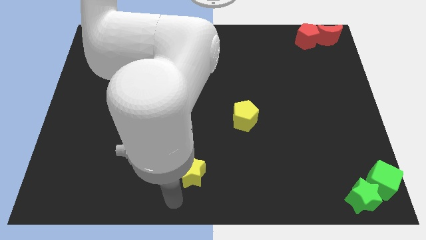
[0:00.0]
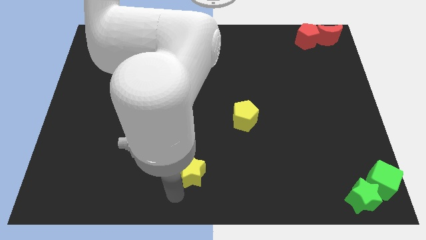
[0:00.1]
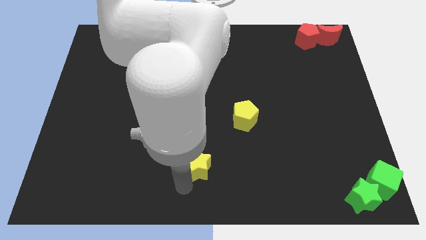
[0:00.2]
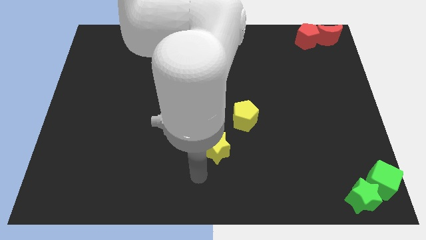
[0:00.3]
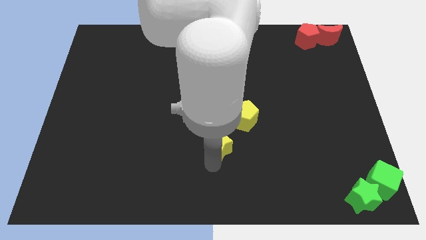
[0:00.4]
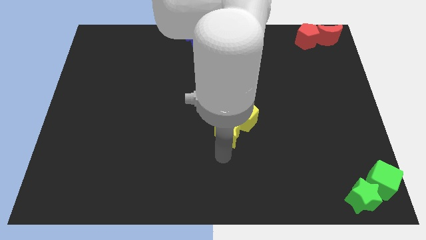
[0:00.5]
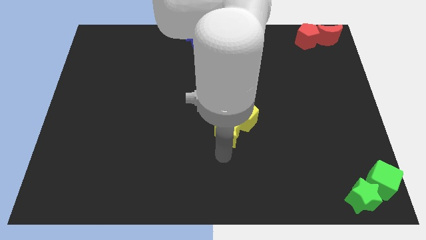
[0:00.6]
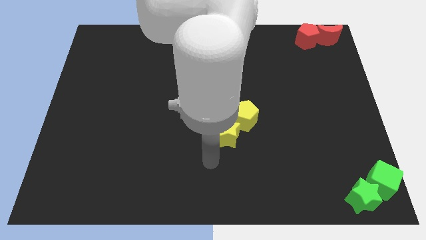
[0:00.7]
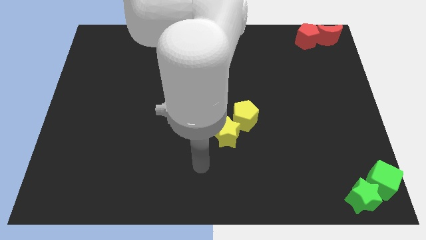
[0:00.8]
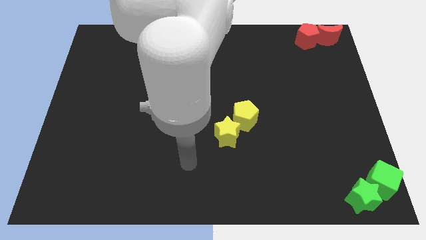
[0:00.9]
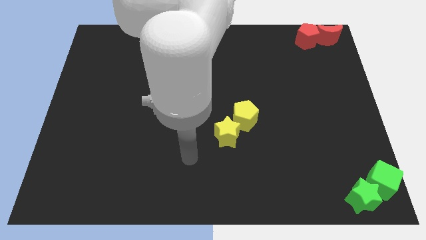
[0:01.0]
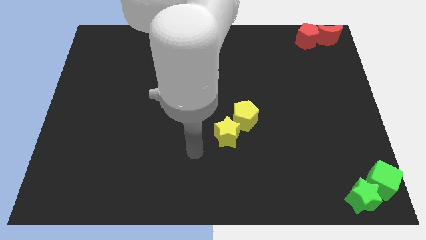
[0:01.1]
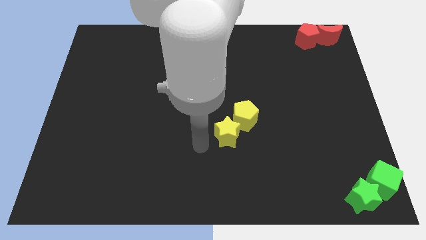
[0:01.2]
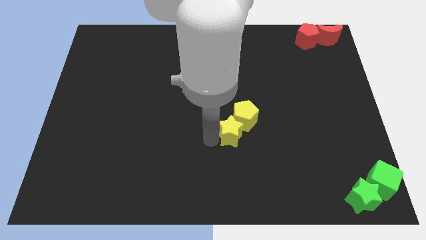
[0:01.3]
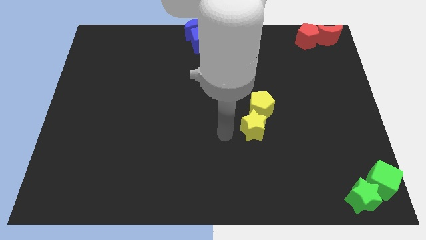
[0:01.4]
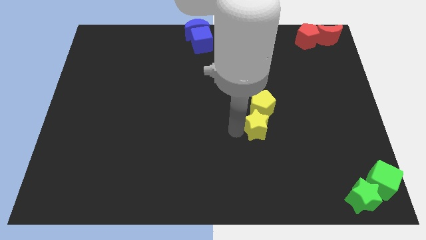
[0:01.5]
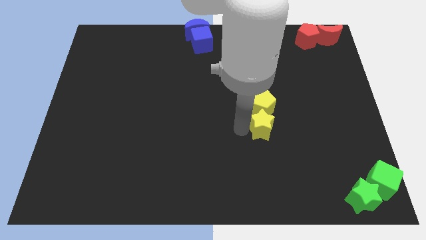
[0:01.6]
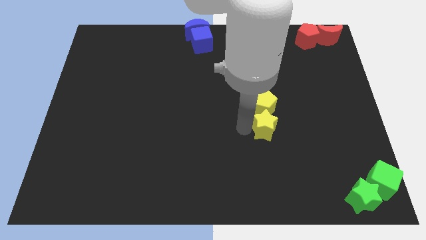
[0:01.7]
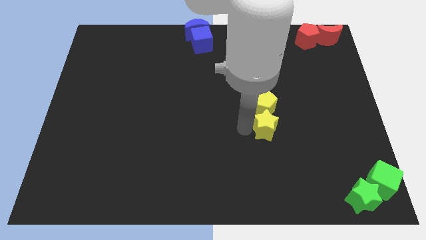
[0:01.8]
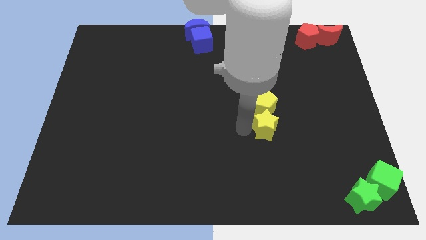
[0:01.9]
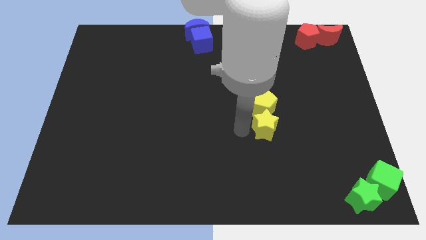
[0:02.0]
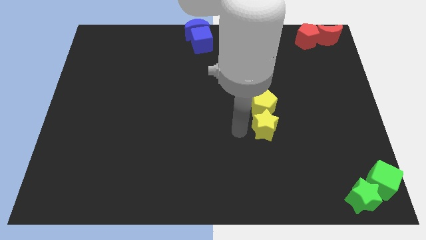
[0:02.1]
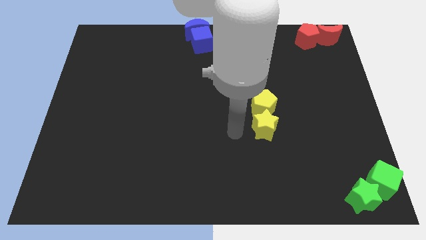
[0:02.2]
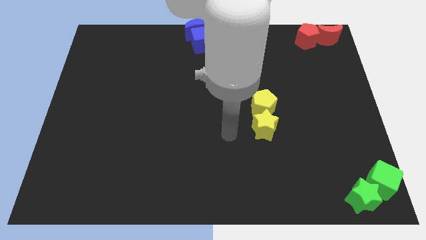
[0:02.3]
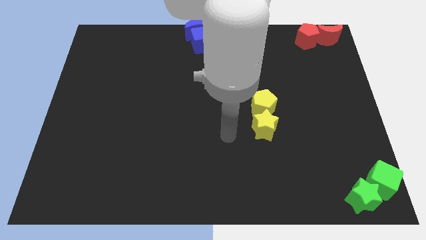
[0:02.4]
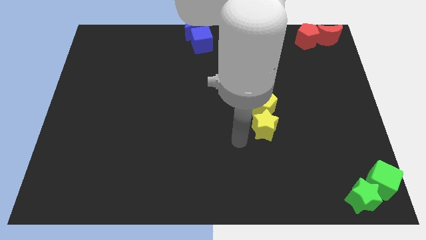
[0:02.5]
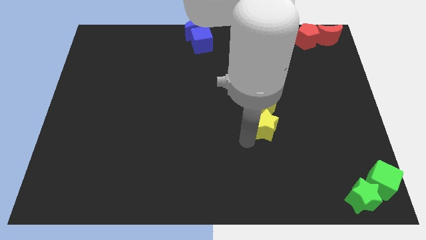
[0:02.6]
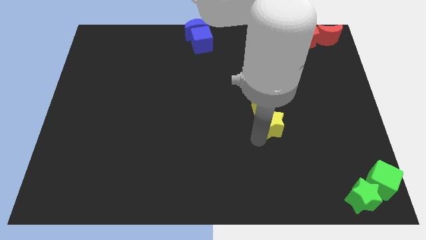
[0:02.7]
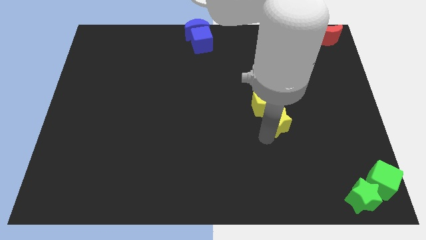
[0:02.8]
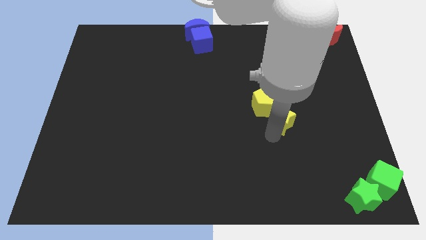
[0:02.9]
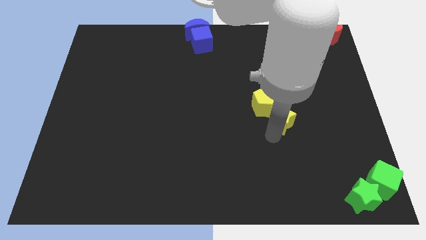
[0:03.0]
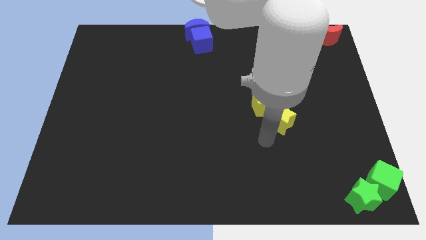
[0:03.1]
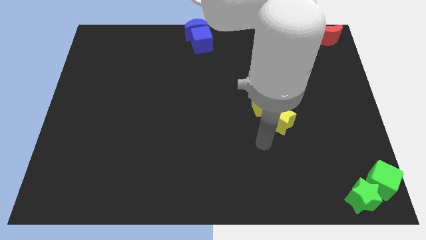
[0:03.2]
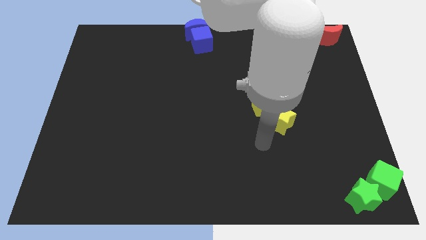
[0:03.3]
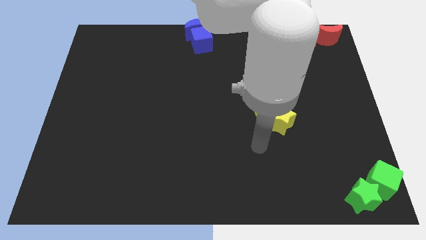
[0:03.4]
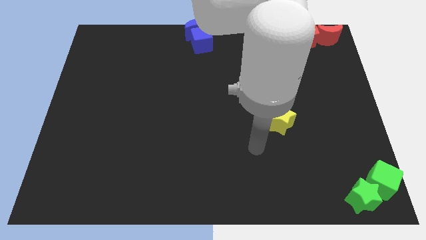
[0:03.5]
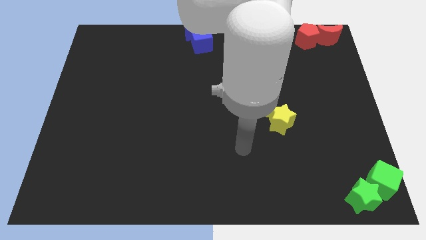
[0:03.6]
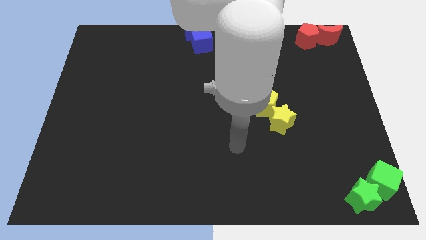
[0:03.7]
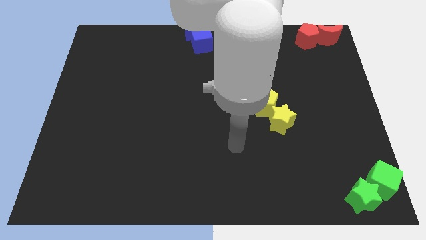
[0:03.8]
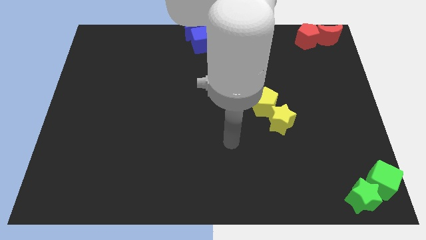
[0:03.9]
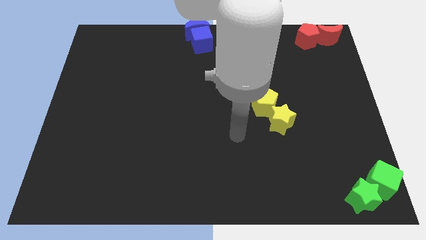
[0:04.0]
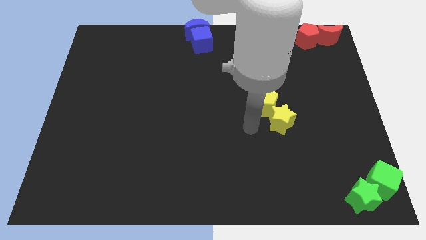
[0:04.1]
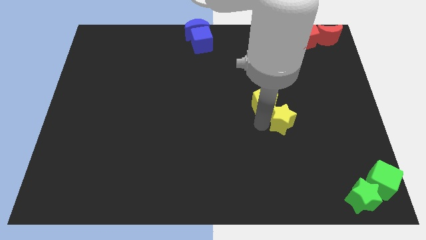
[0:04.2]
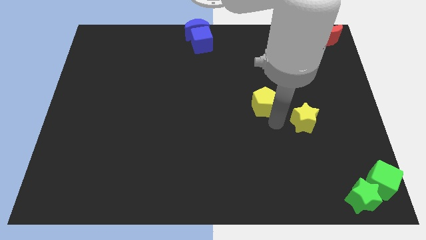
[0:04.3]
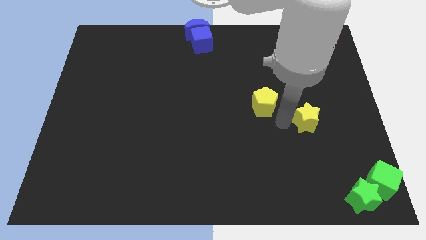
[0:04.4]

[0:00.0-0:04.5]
move yellow star slightly right

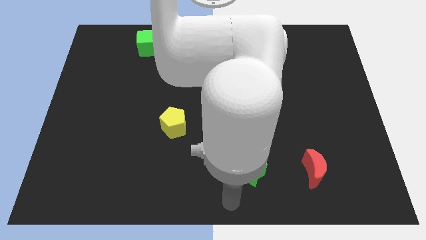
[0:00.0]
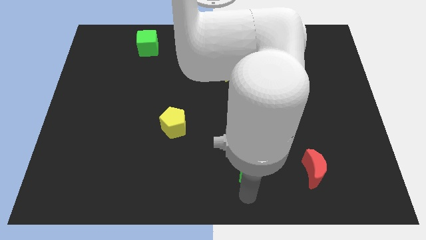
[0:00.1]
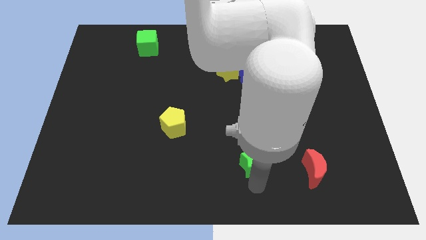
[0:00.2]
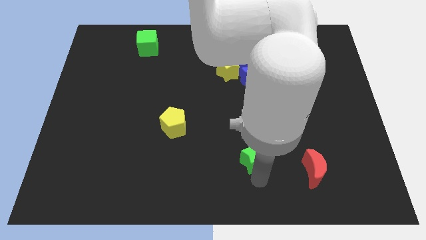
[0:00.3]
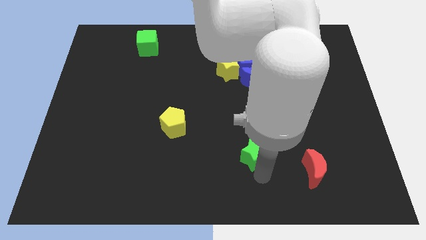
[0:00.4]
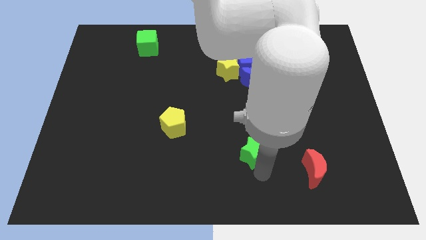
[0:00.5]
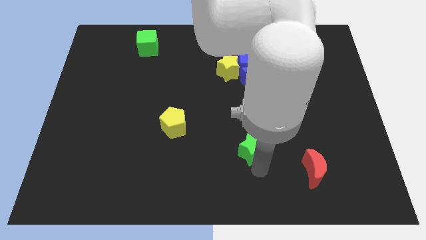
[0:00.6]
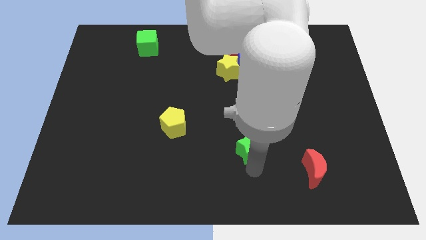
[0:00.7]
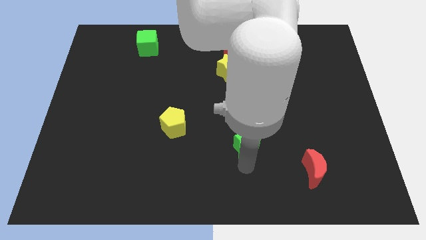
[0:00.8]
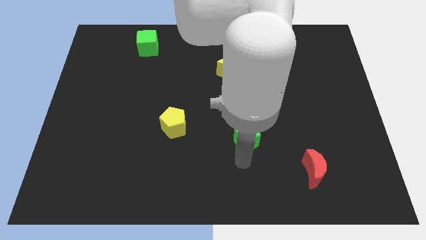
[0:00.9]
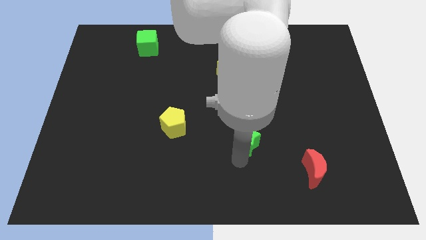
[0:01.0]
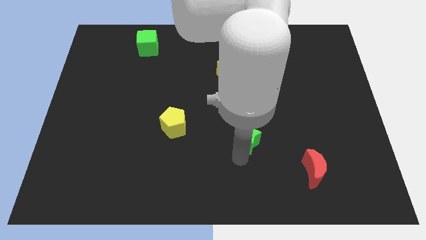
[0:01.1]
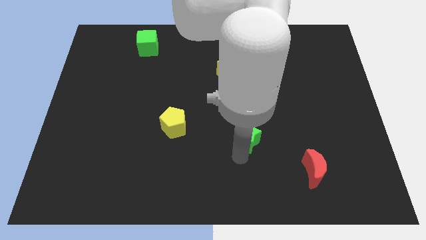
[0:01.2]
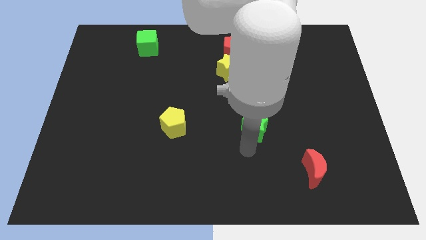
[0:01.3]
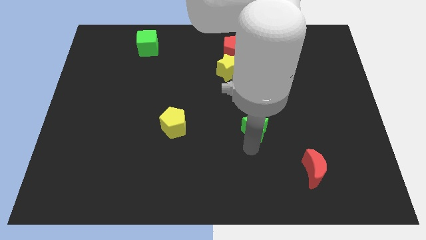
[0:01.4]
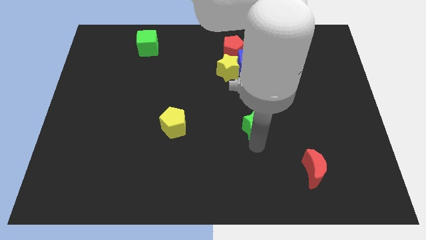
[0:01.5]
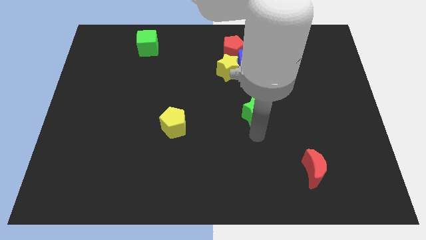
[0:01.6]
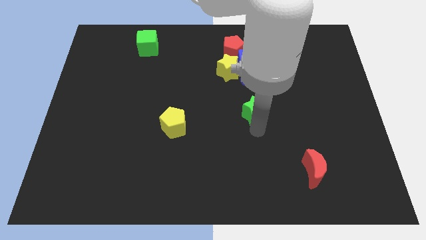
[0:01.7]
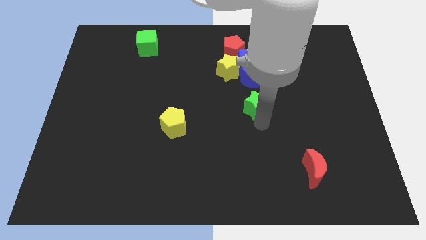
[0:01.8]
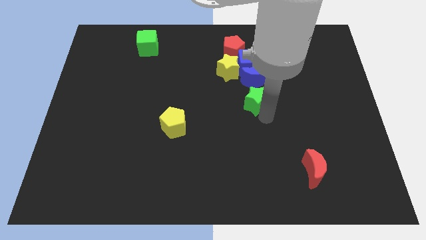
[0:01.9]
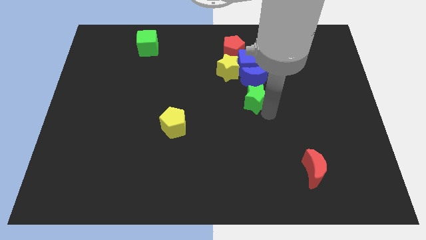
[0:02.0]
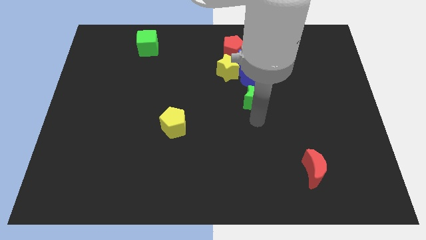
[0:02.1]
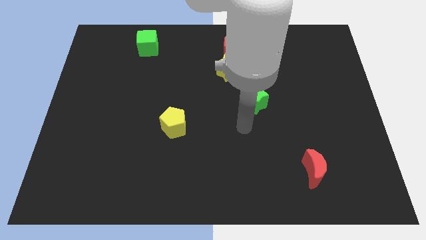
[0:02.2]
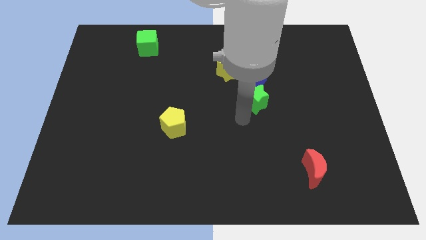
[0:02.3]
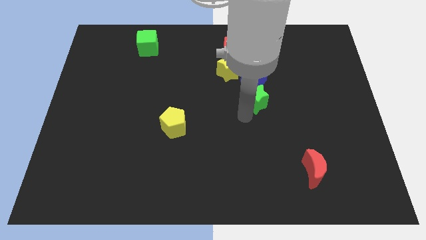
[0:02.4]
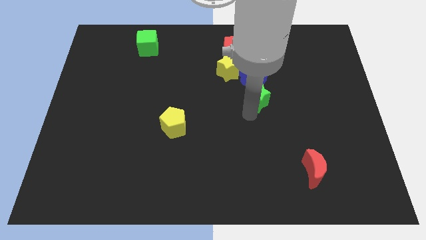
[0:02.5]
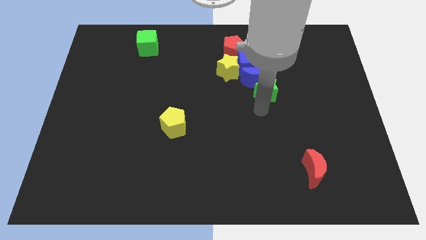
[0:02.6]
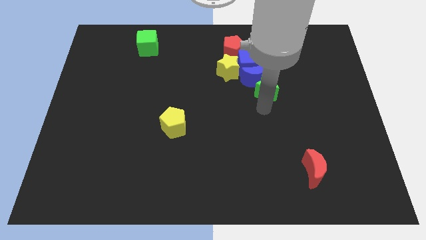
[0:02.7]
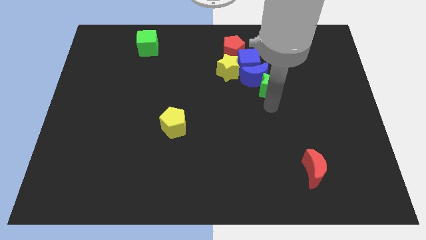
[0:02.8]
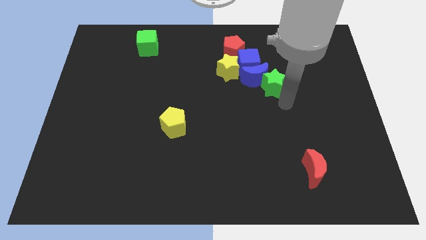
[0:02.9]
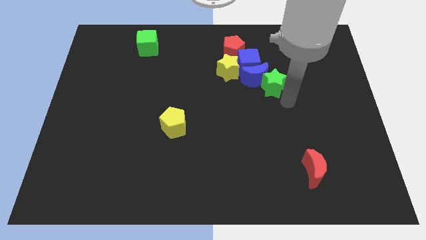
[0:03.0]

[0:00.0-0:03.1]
push green star into blue moon

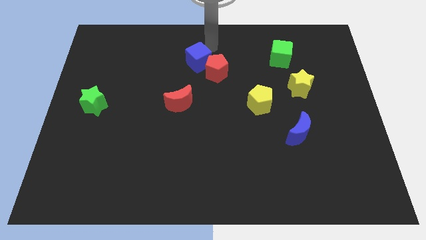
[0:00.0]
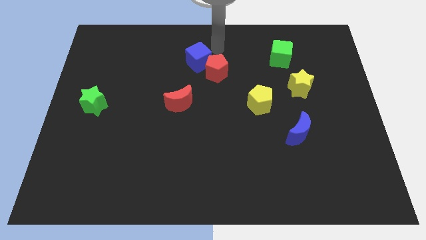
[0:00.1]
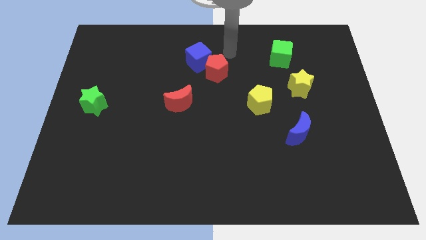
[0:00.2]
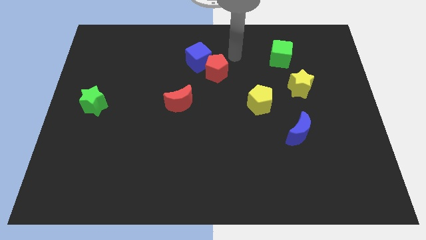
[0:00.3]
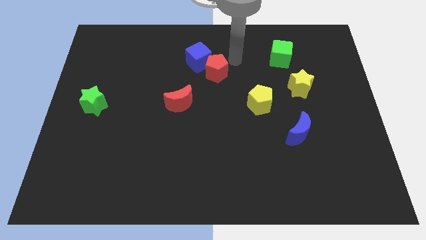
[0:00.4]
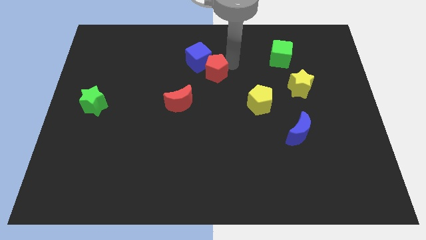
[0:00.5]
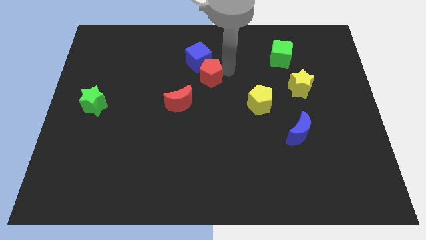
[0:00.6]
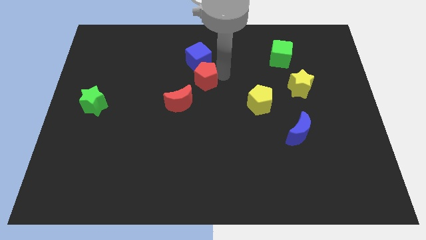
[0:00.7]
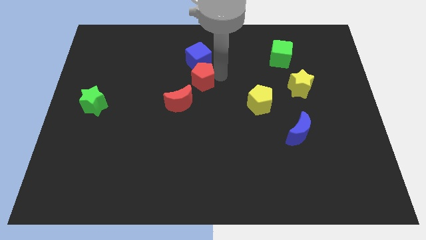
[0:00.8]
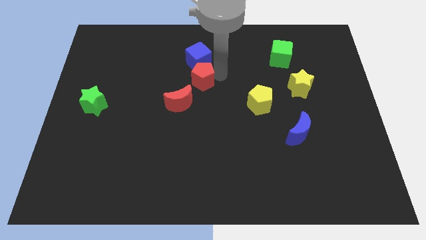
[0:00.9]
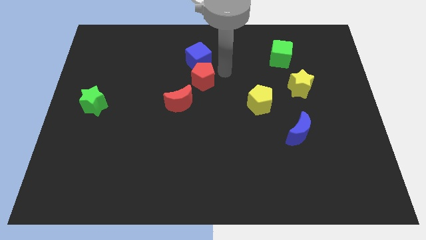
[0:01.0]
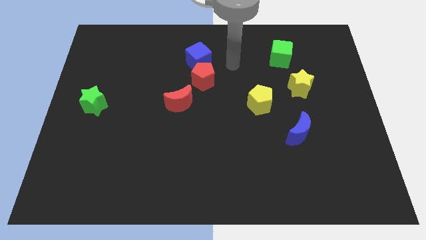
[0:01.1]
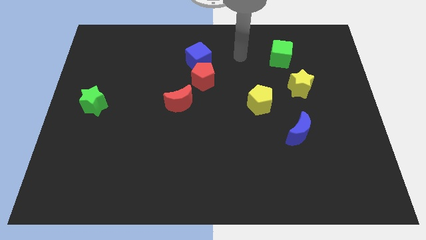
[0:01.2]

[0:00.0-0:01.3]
move the red pentagon to the bottom of the blue cube
